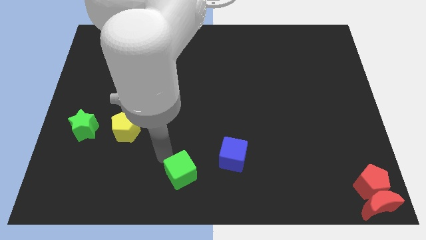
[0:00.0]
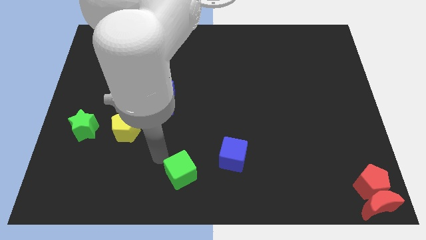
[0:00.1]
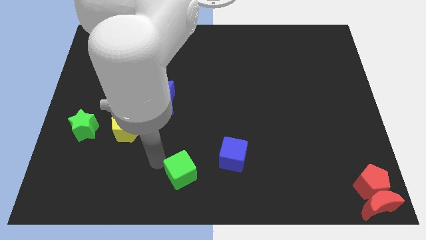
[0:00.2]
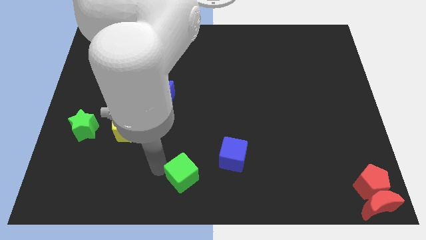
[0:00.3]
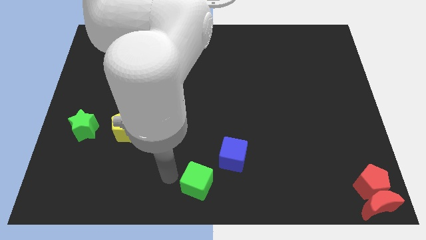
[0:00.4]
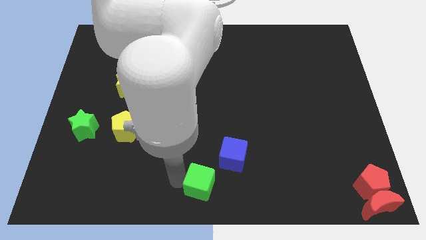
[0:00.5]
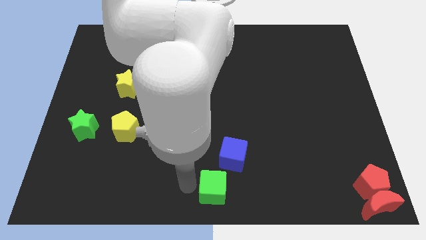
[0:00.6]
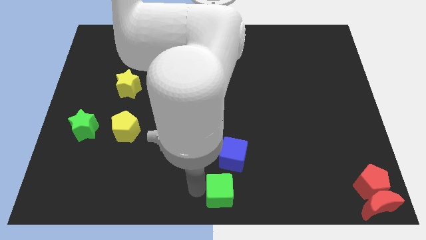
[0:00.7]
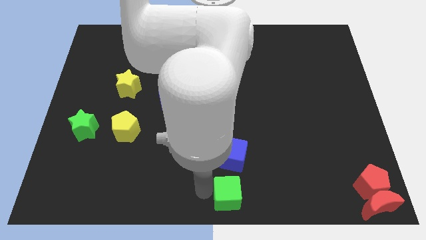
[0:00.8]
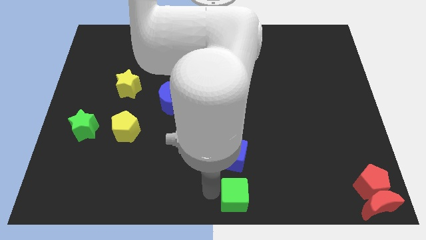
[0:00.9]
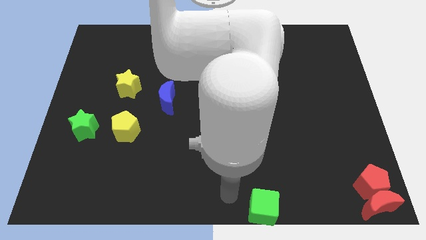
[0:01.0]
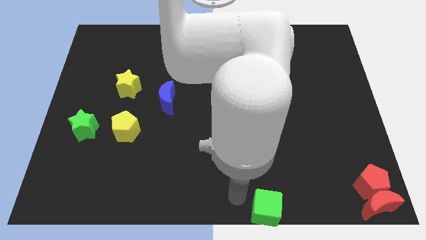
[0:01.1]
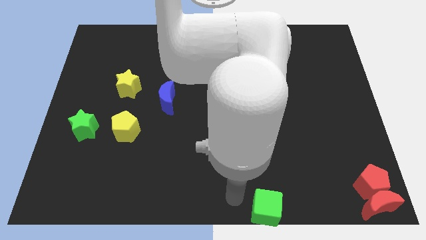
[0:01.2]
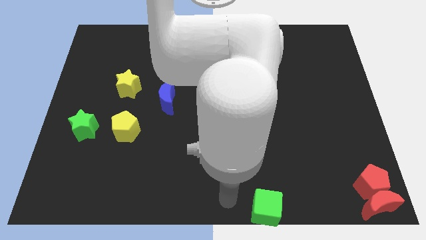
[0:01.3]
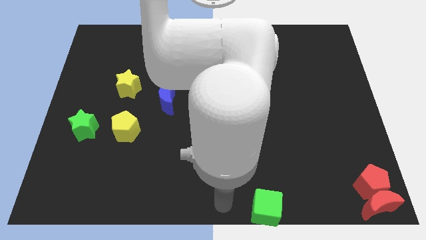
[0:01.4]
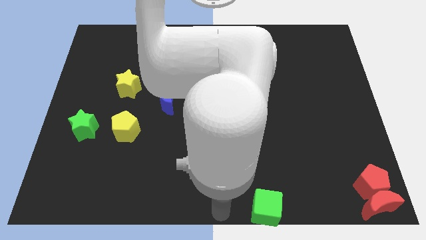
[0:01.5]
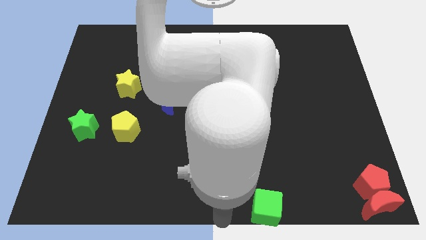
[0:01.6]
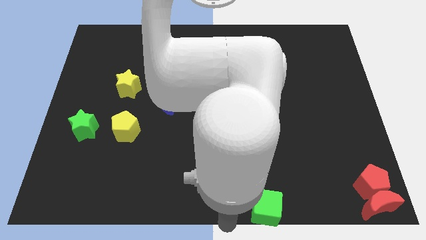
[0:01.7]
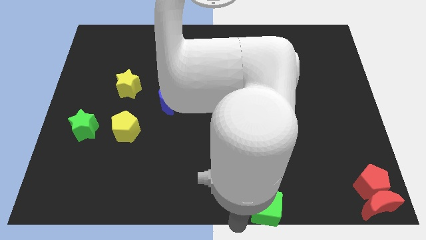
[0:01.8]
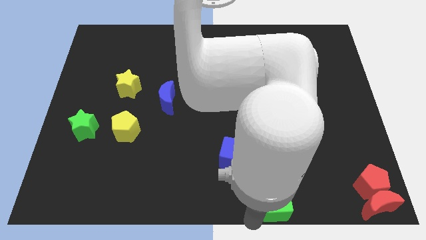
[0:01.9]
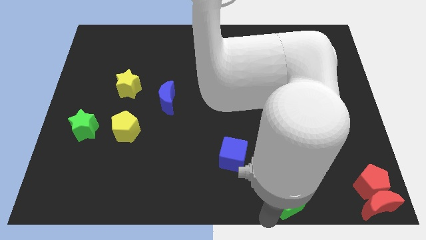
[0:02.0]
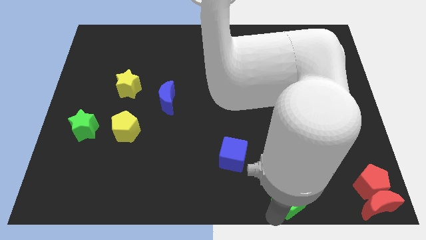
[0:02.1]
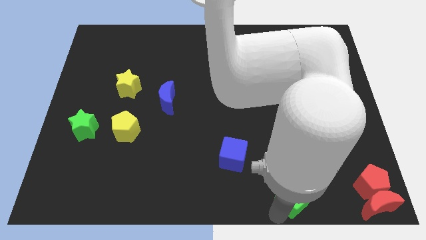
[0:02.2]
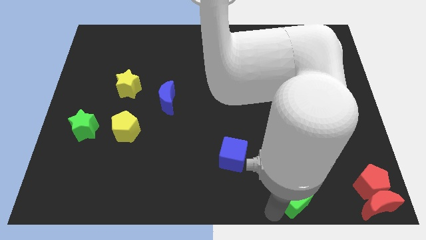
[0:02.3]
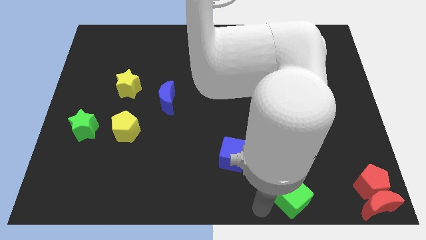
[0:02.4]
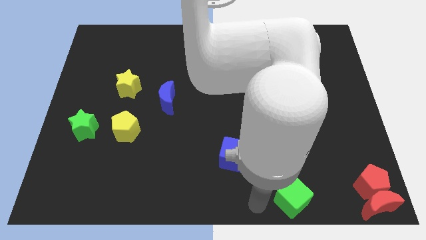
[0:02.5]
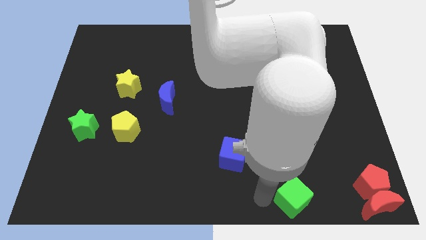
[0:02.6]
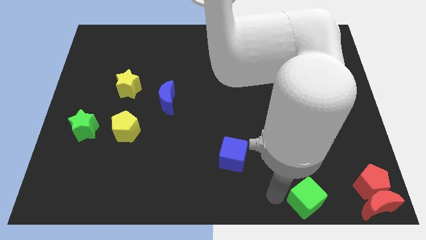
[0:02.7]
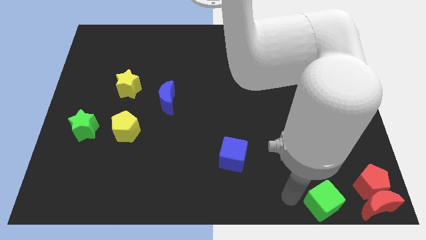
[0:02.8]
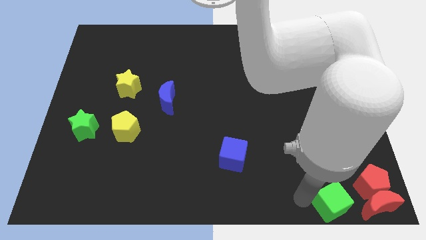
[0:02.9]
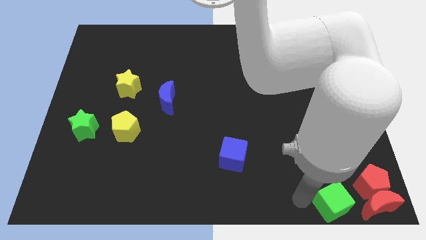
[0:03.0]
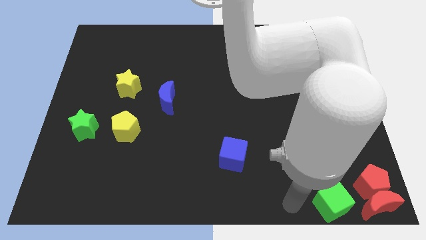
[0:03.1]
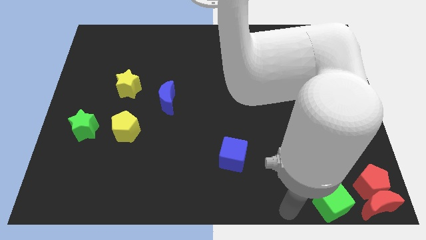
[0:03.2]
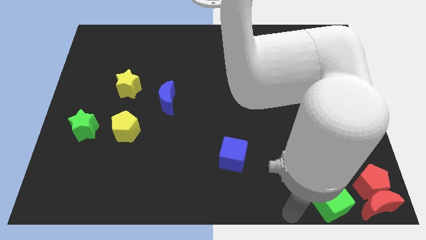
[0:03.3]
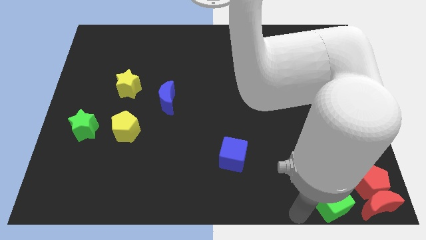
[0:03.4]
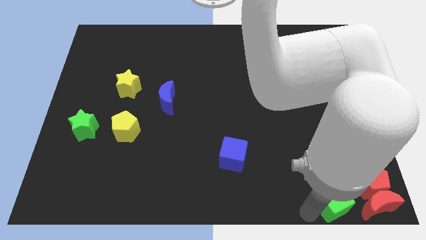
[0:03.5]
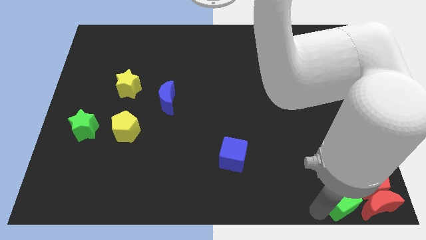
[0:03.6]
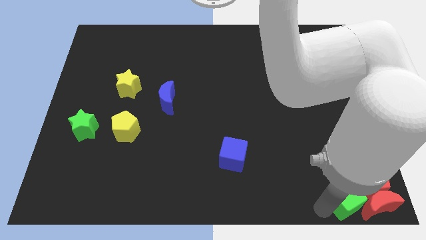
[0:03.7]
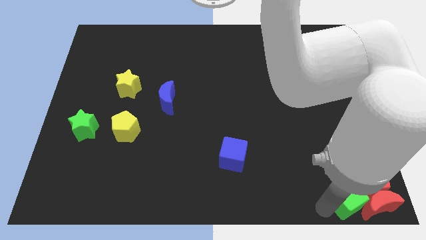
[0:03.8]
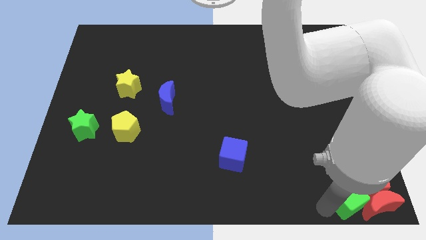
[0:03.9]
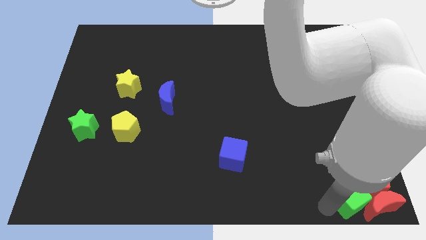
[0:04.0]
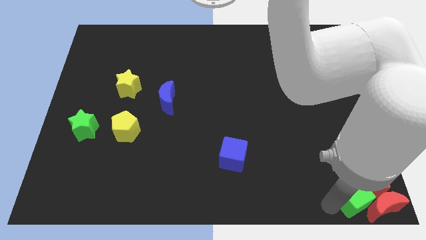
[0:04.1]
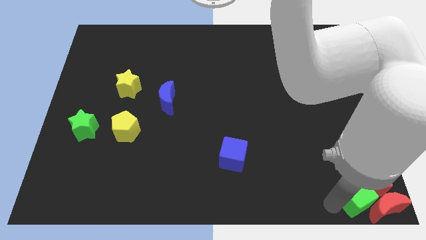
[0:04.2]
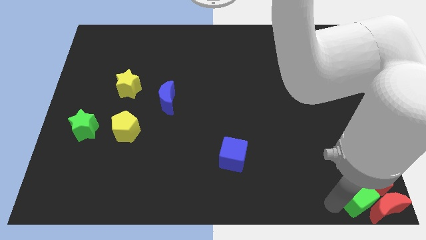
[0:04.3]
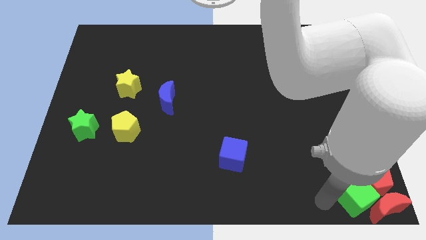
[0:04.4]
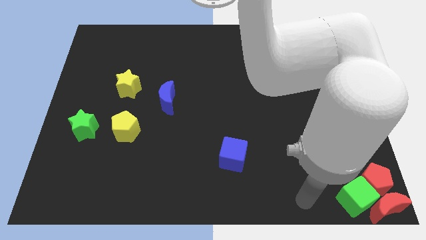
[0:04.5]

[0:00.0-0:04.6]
push the green cube into the red crescent

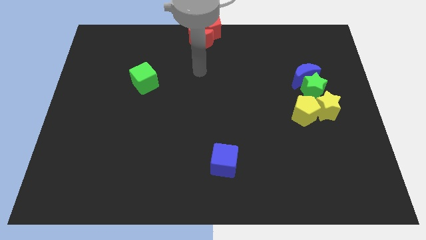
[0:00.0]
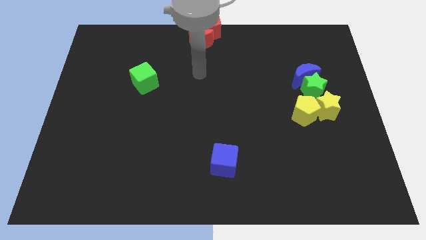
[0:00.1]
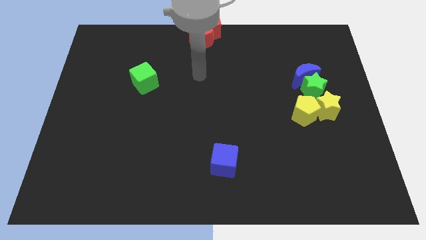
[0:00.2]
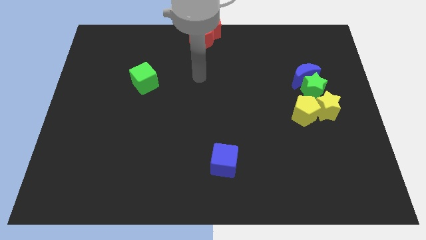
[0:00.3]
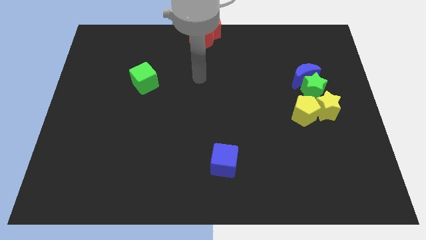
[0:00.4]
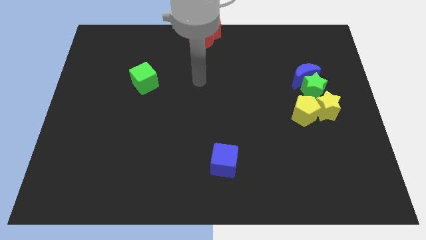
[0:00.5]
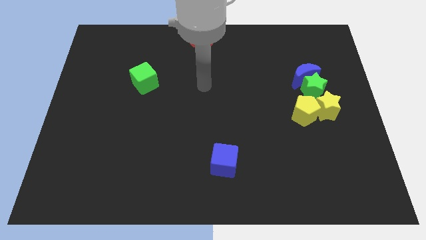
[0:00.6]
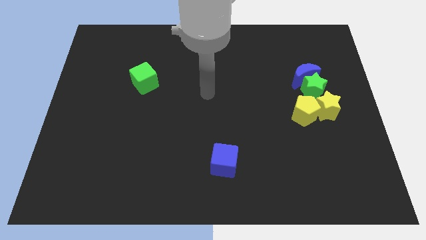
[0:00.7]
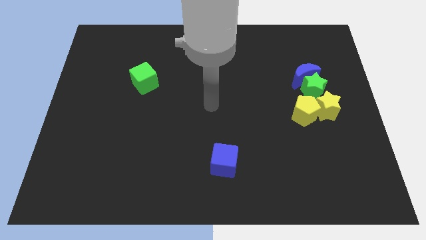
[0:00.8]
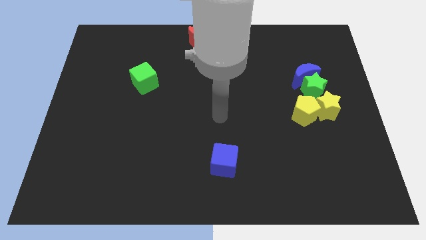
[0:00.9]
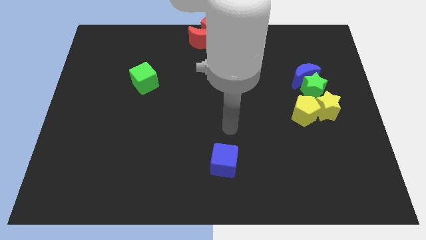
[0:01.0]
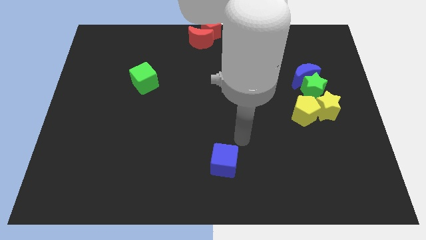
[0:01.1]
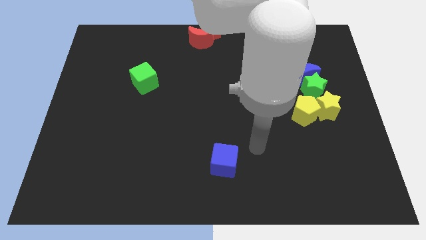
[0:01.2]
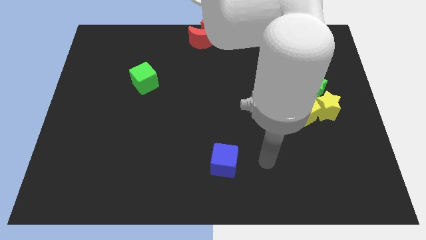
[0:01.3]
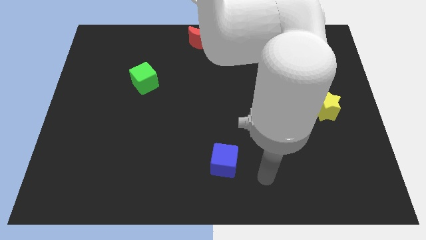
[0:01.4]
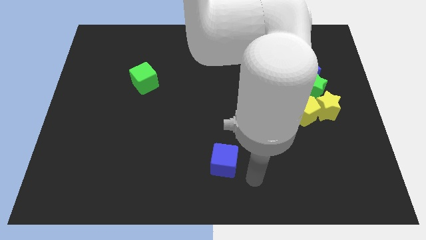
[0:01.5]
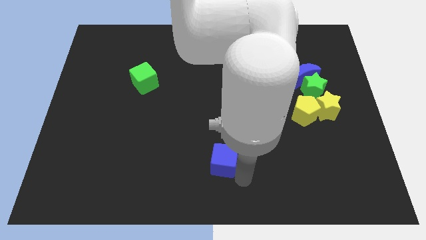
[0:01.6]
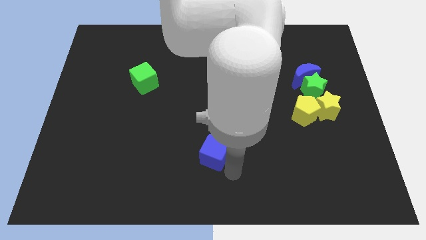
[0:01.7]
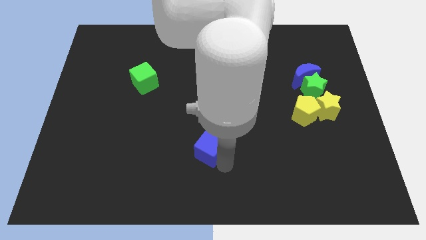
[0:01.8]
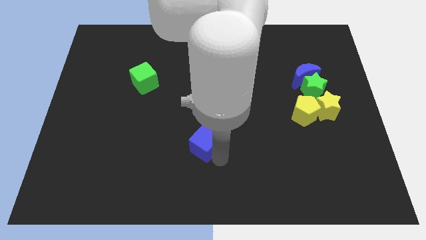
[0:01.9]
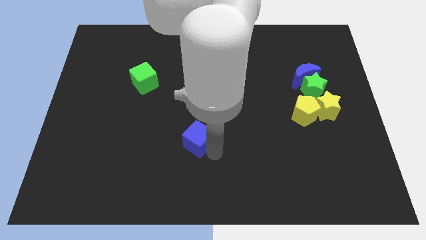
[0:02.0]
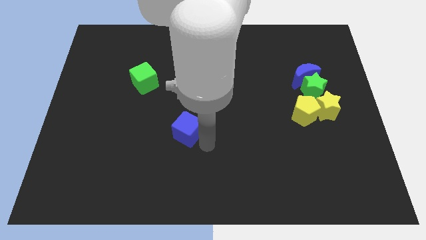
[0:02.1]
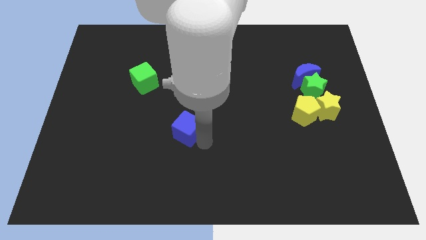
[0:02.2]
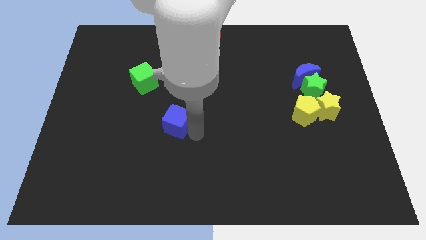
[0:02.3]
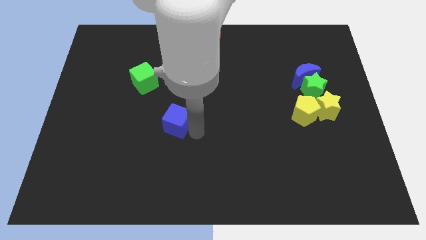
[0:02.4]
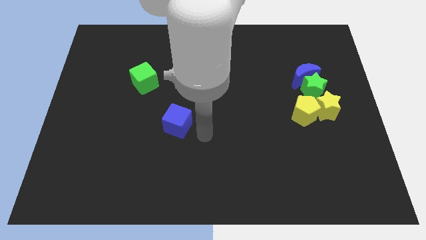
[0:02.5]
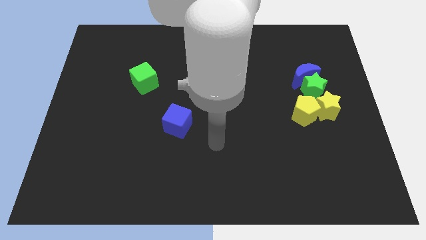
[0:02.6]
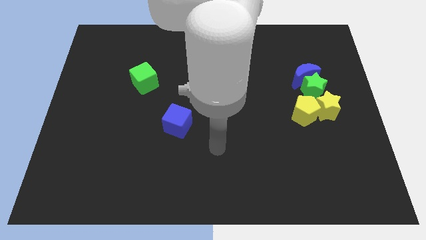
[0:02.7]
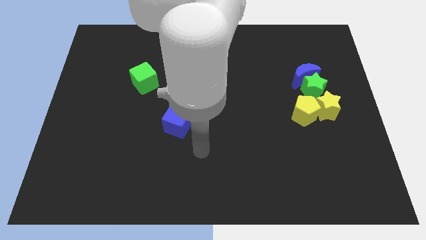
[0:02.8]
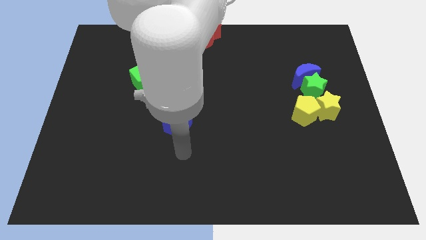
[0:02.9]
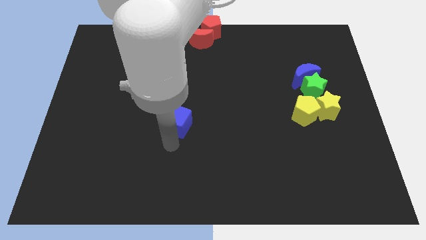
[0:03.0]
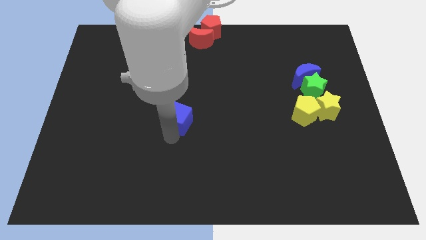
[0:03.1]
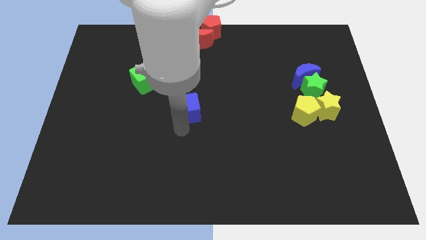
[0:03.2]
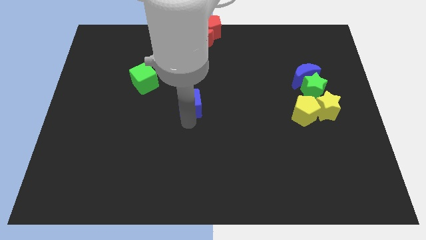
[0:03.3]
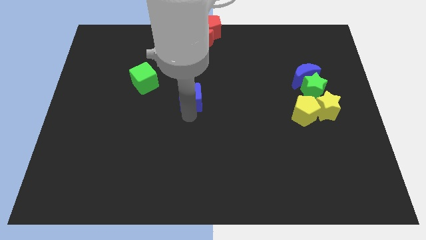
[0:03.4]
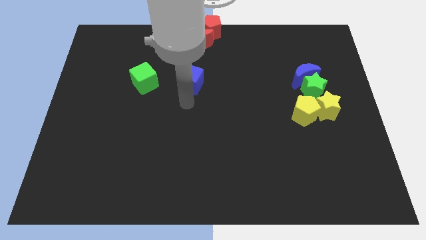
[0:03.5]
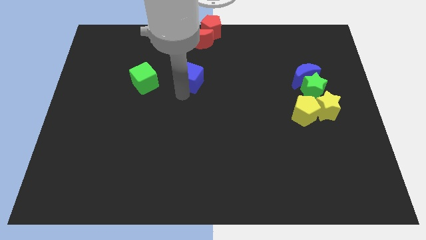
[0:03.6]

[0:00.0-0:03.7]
push blue cube parallel to green cube

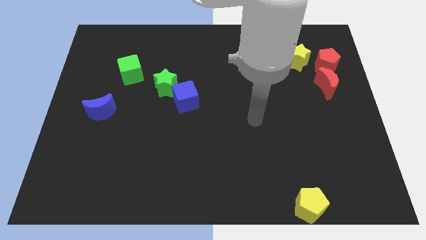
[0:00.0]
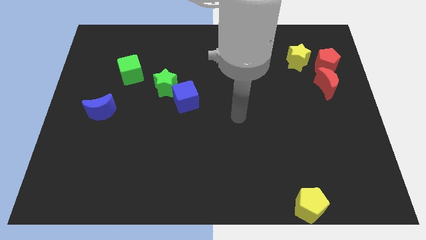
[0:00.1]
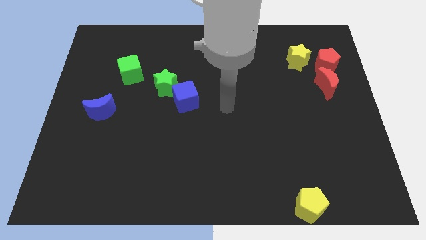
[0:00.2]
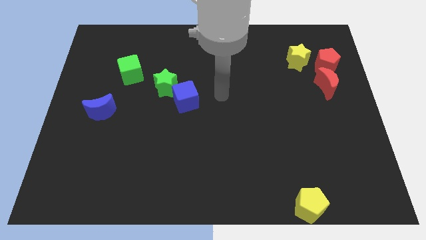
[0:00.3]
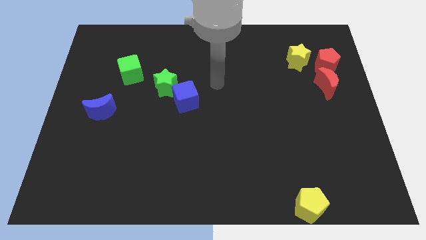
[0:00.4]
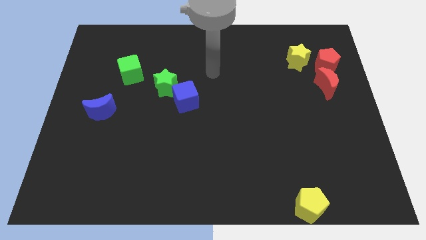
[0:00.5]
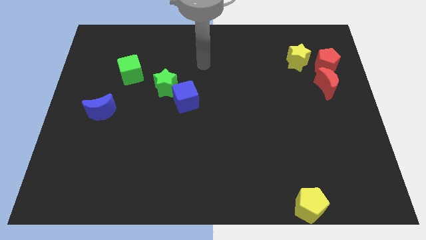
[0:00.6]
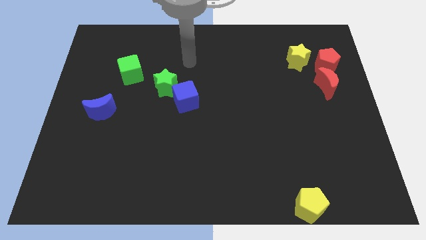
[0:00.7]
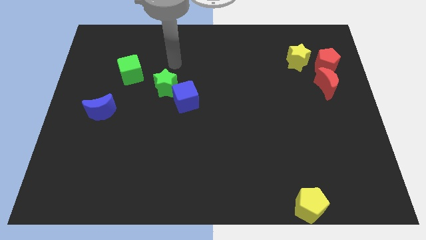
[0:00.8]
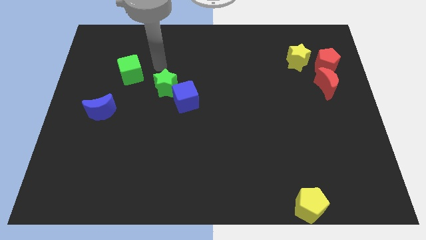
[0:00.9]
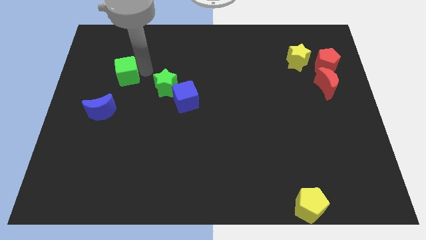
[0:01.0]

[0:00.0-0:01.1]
move your arm close to the green cube
